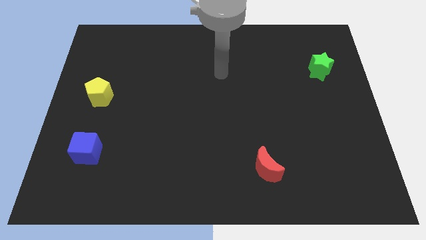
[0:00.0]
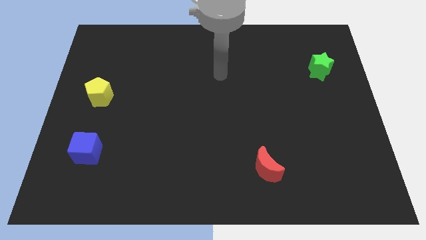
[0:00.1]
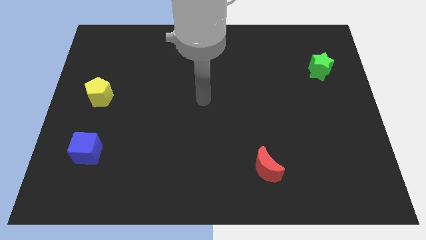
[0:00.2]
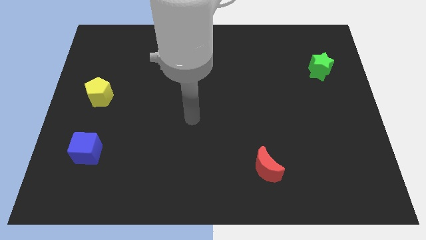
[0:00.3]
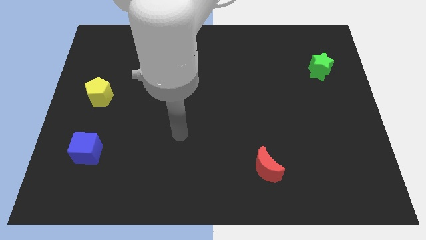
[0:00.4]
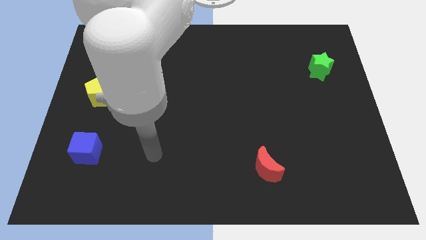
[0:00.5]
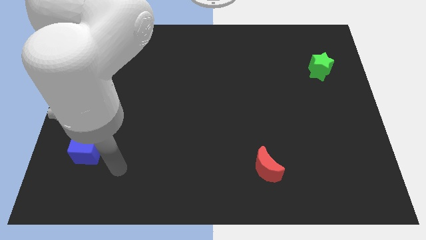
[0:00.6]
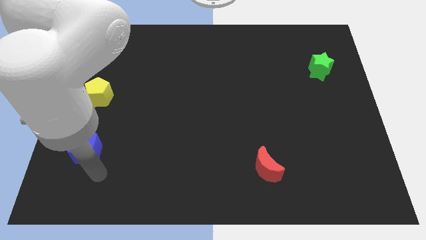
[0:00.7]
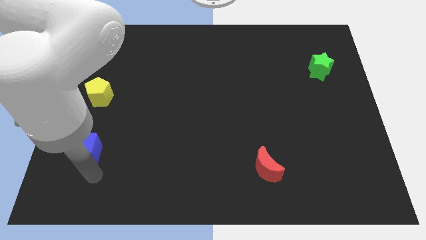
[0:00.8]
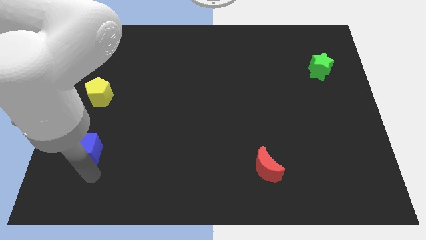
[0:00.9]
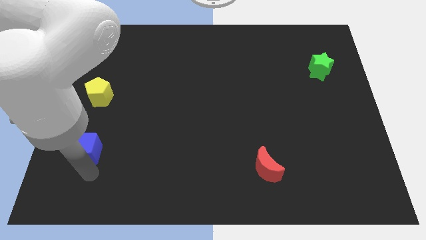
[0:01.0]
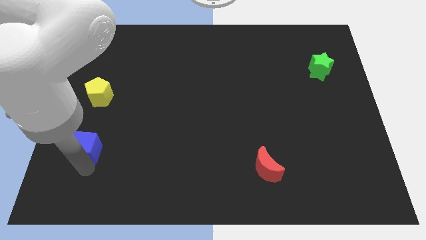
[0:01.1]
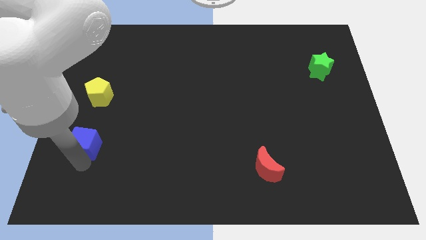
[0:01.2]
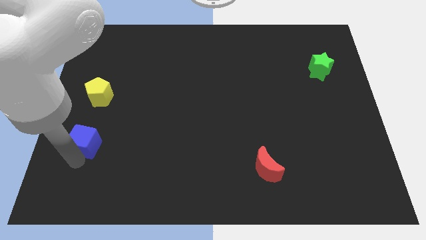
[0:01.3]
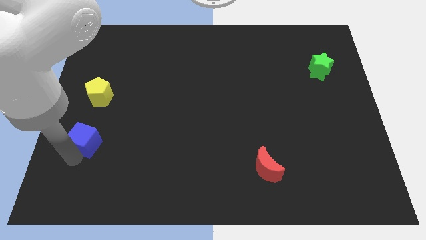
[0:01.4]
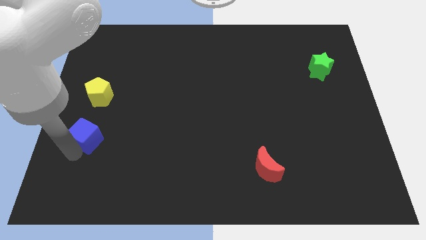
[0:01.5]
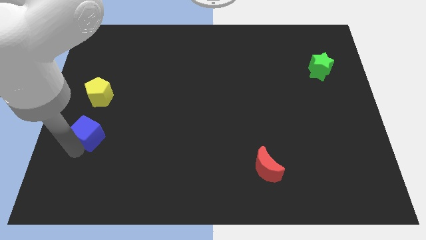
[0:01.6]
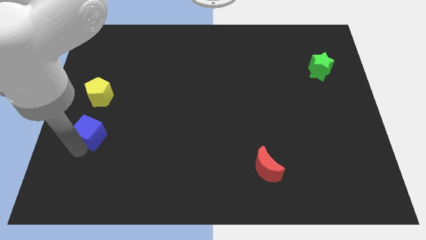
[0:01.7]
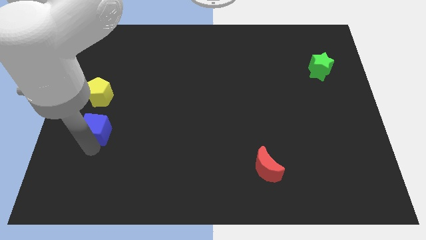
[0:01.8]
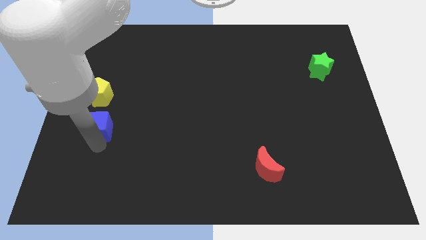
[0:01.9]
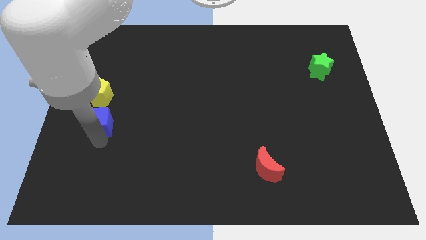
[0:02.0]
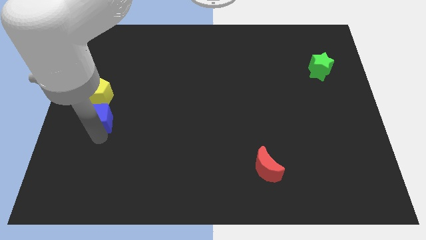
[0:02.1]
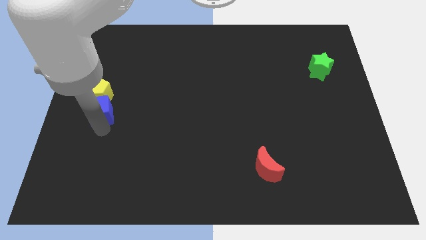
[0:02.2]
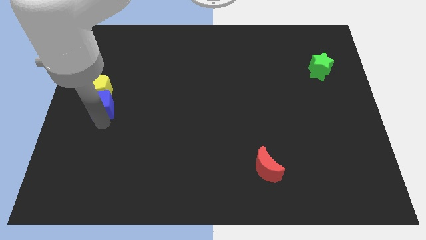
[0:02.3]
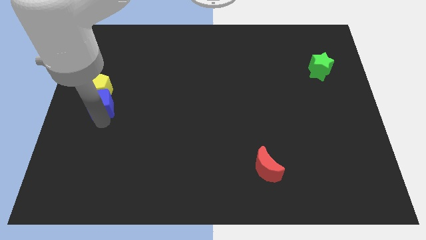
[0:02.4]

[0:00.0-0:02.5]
push the cube to the yellow block

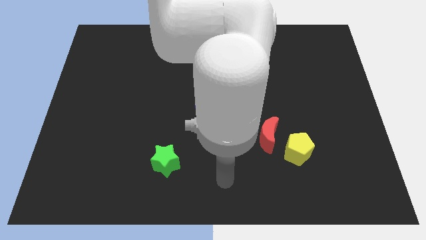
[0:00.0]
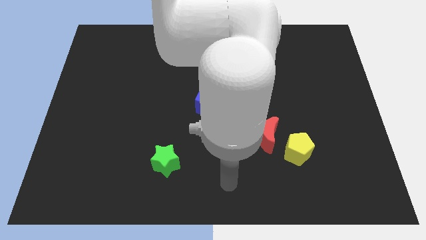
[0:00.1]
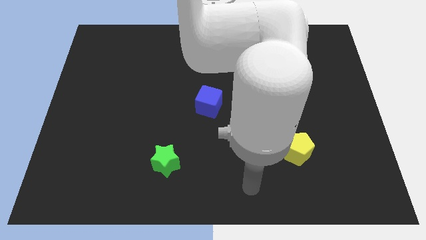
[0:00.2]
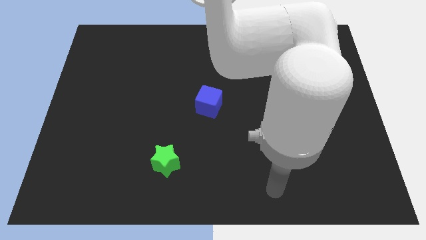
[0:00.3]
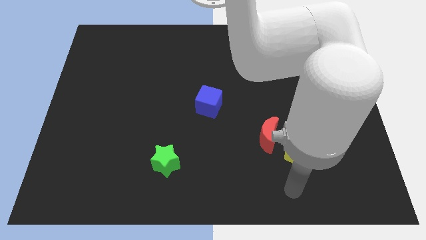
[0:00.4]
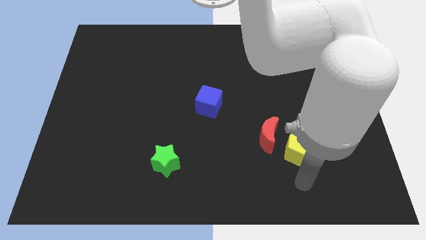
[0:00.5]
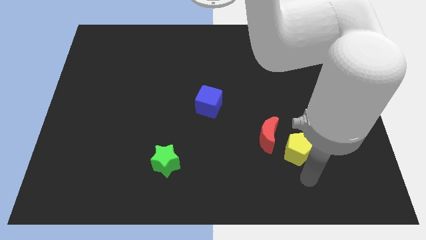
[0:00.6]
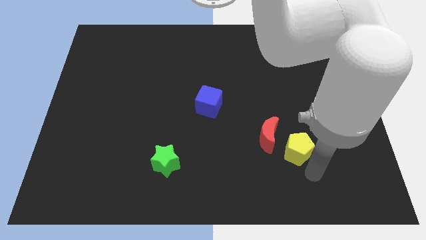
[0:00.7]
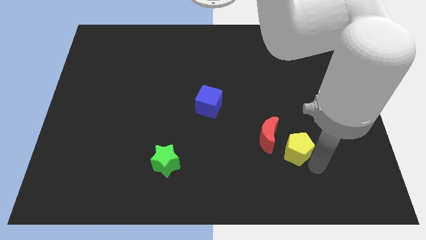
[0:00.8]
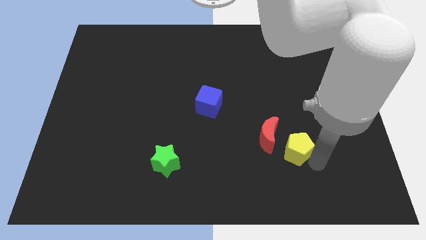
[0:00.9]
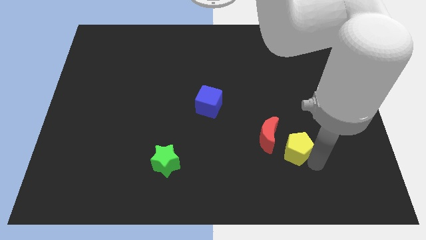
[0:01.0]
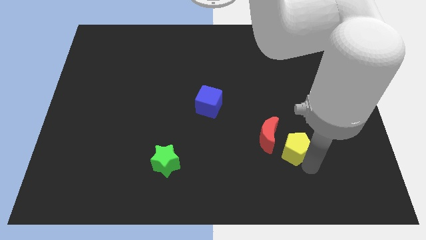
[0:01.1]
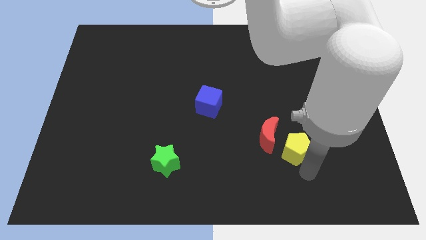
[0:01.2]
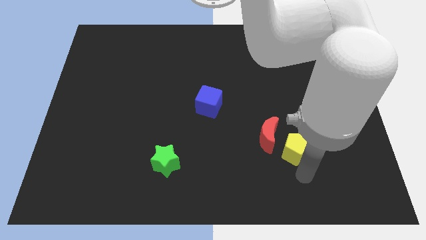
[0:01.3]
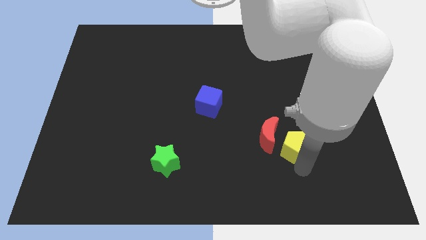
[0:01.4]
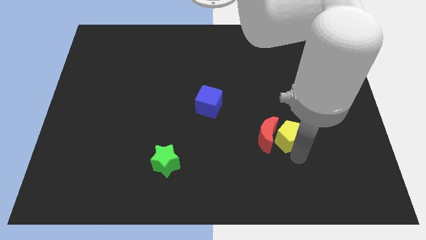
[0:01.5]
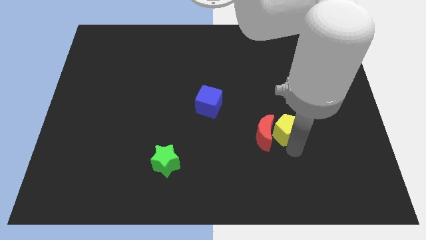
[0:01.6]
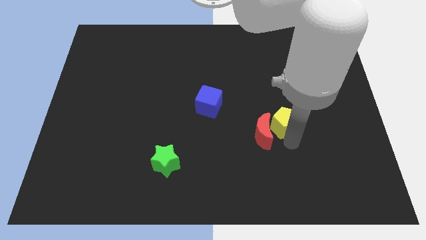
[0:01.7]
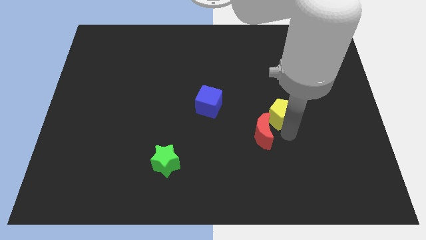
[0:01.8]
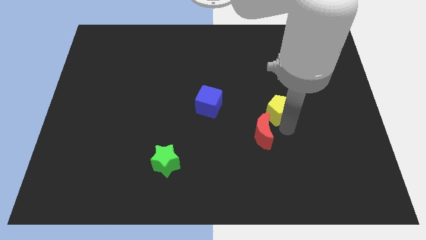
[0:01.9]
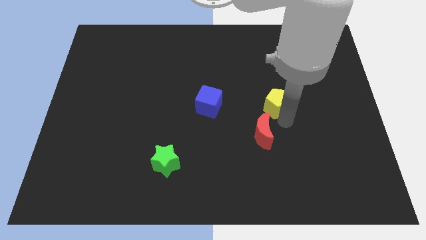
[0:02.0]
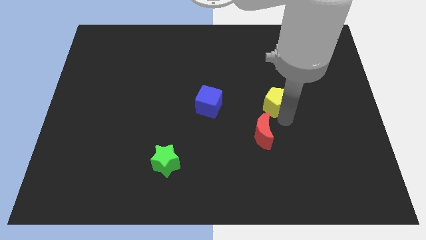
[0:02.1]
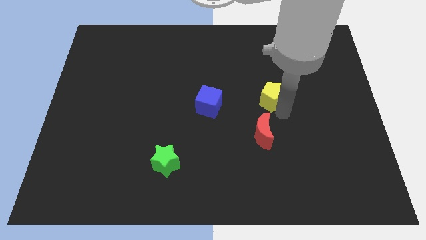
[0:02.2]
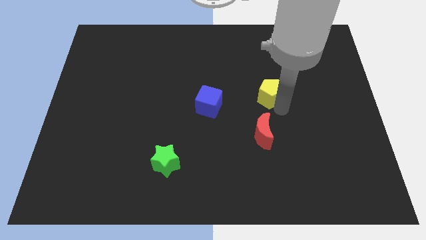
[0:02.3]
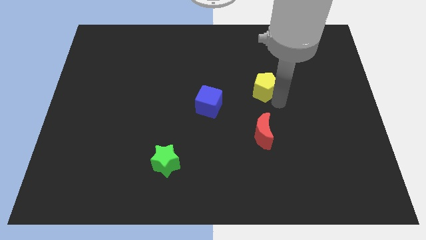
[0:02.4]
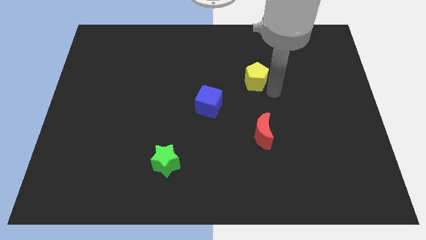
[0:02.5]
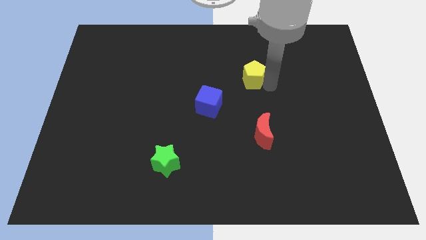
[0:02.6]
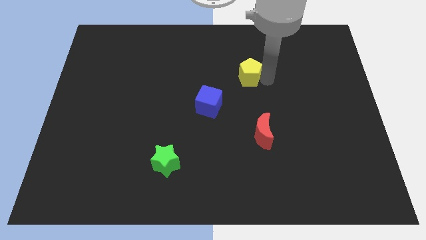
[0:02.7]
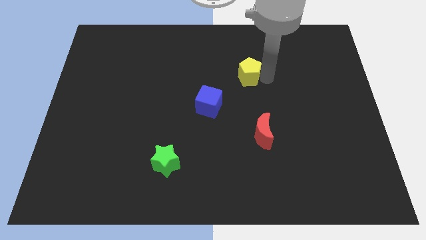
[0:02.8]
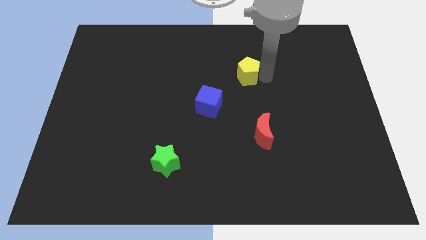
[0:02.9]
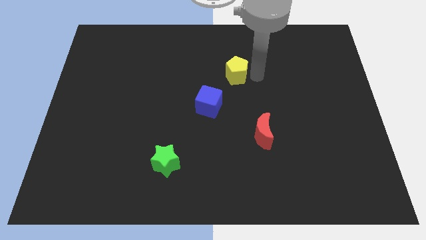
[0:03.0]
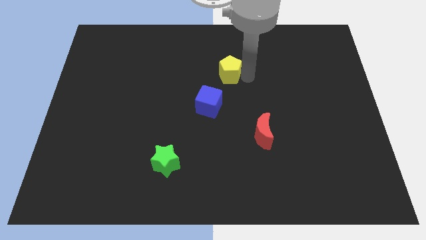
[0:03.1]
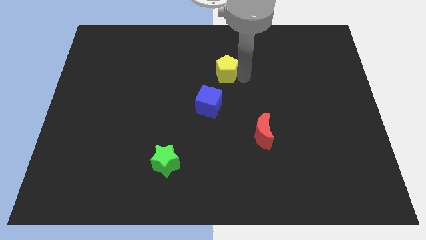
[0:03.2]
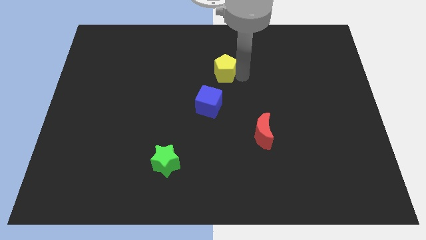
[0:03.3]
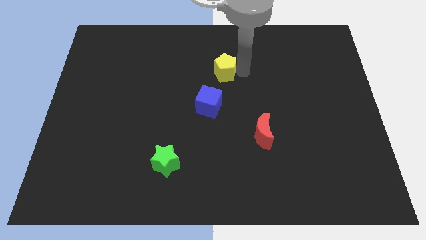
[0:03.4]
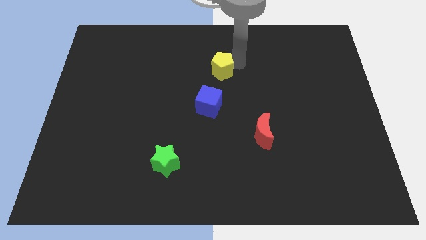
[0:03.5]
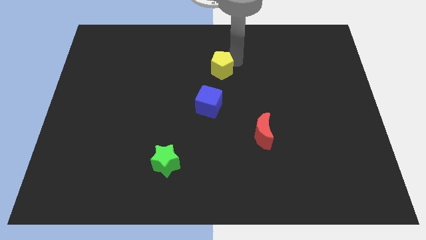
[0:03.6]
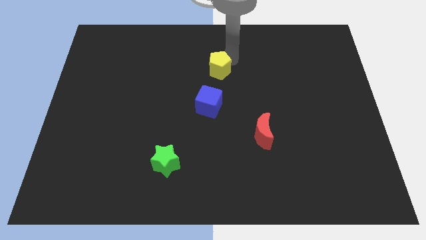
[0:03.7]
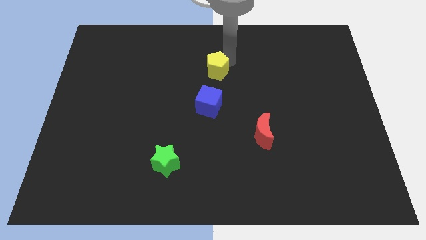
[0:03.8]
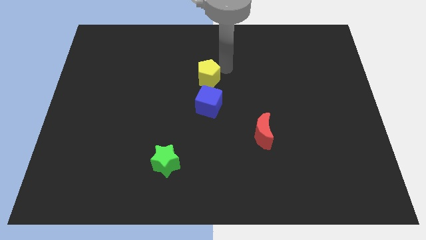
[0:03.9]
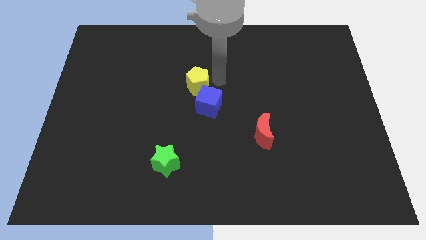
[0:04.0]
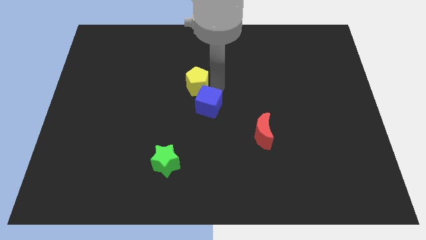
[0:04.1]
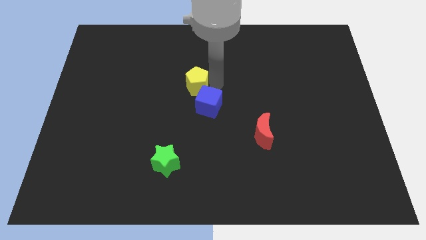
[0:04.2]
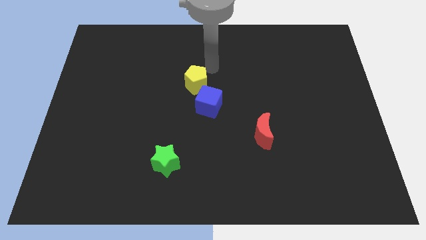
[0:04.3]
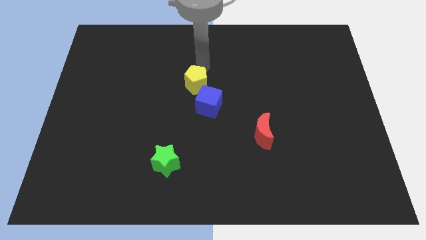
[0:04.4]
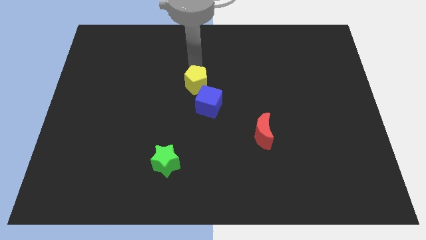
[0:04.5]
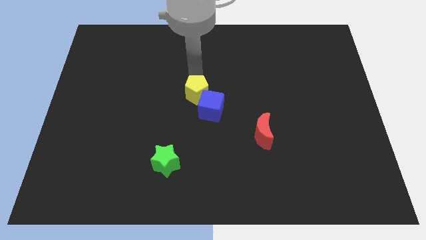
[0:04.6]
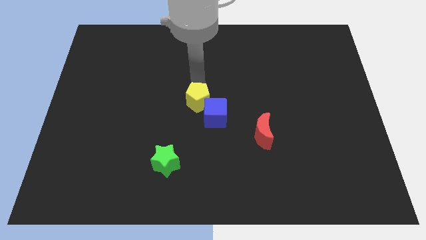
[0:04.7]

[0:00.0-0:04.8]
put the pentagon close to the blue cube

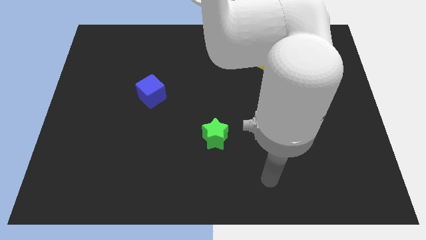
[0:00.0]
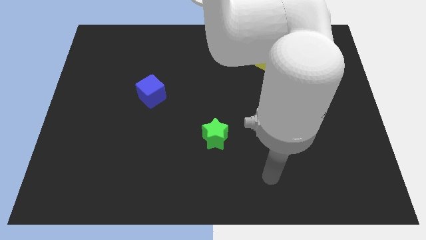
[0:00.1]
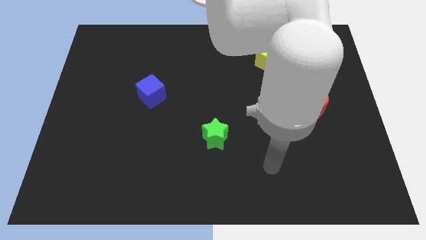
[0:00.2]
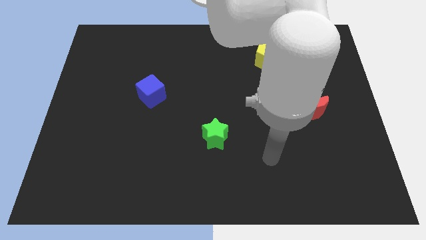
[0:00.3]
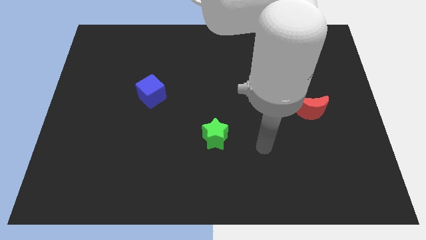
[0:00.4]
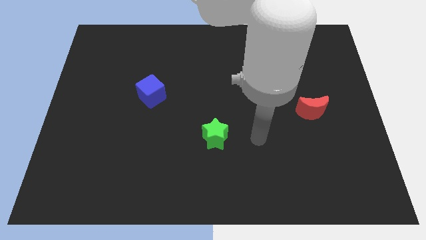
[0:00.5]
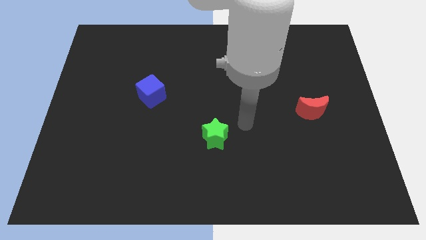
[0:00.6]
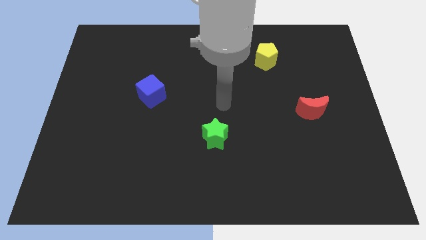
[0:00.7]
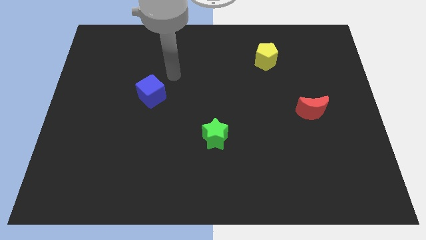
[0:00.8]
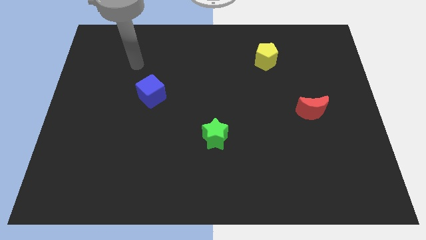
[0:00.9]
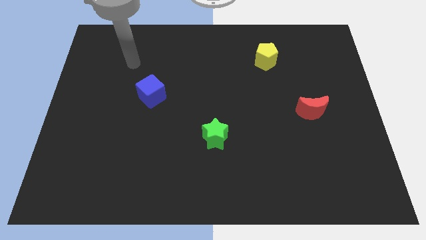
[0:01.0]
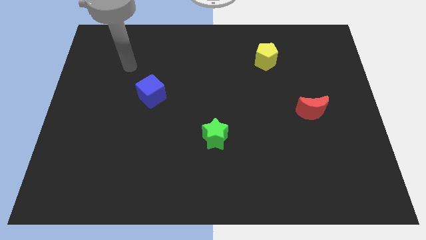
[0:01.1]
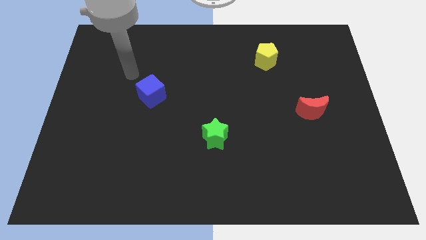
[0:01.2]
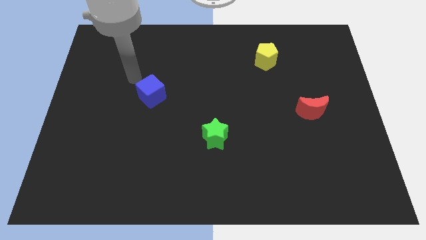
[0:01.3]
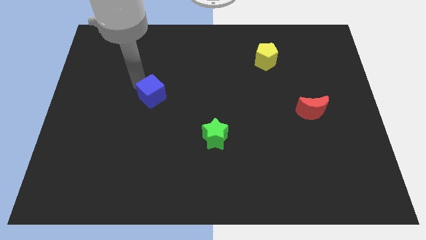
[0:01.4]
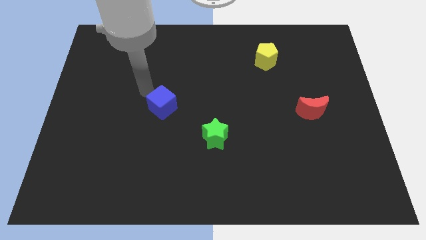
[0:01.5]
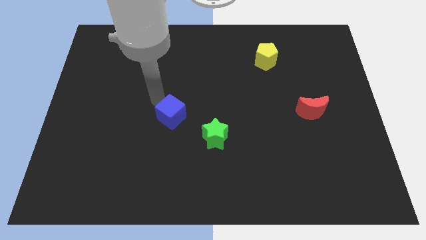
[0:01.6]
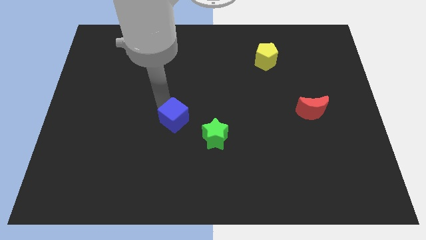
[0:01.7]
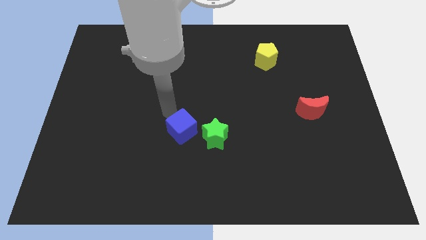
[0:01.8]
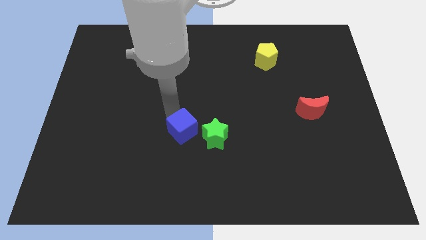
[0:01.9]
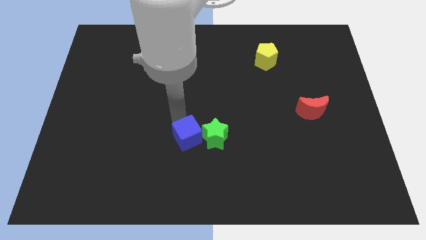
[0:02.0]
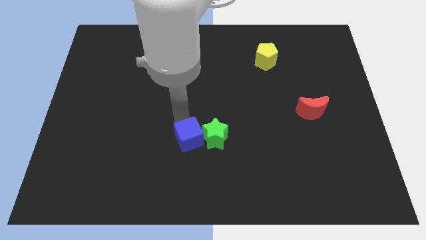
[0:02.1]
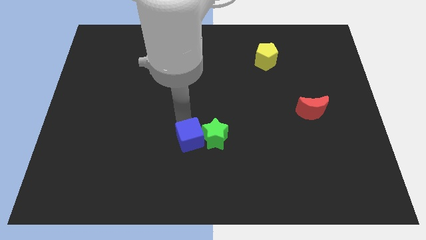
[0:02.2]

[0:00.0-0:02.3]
push the blue block close to the green star
